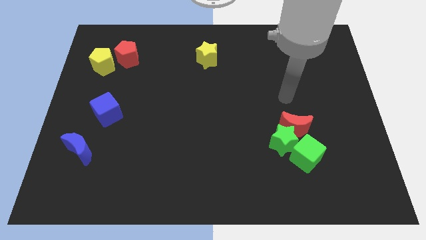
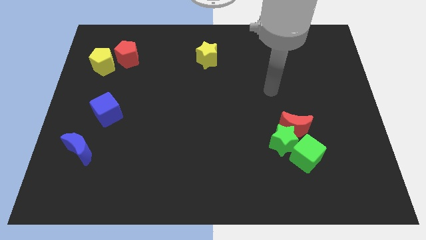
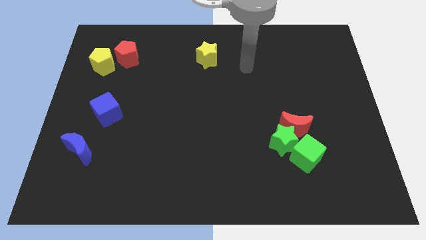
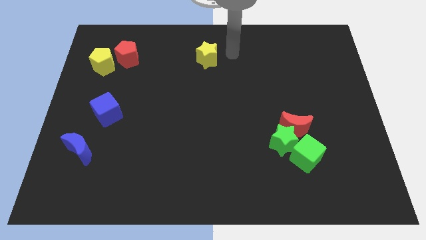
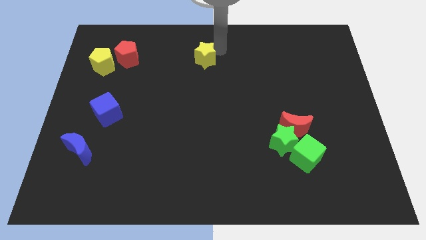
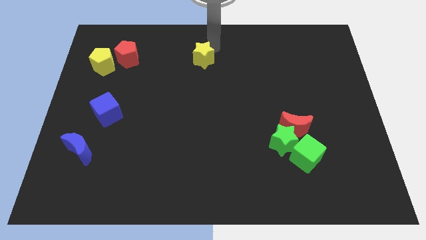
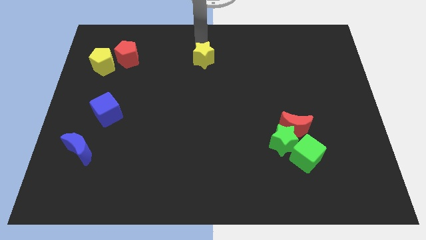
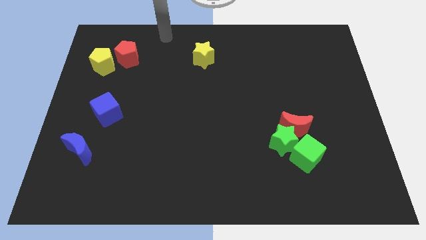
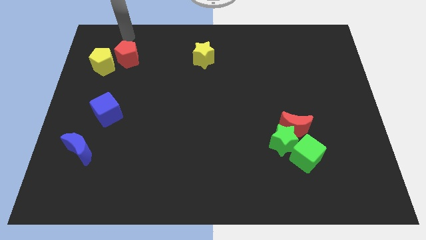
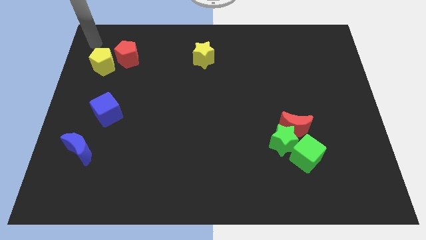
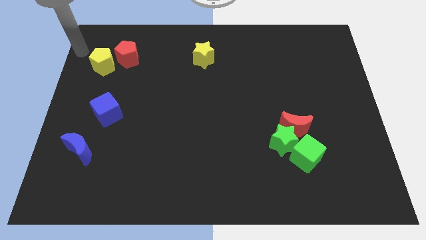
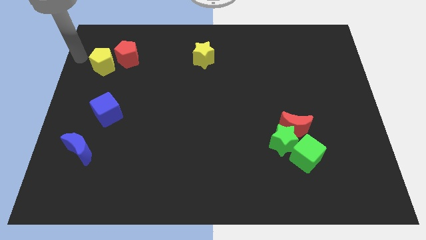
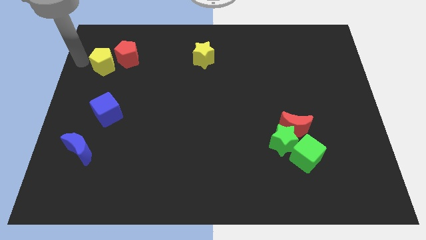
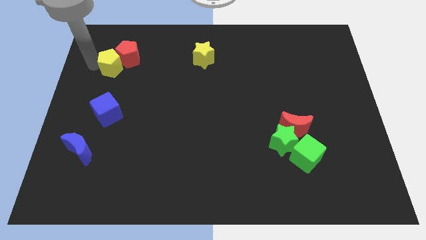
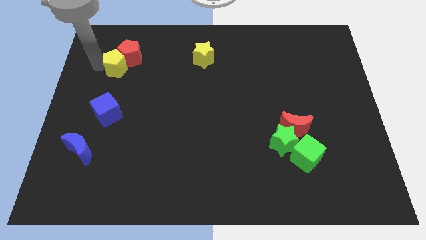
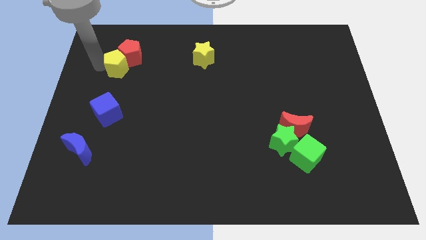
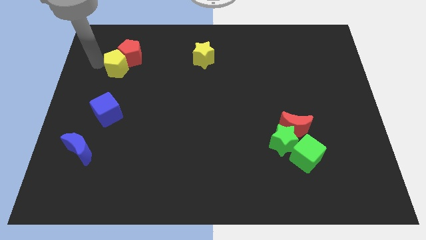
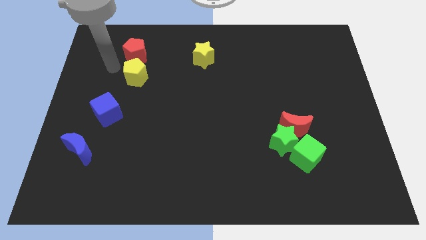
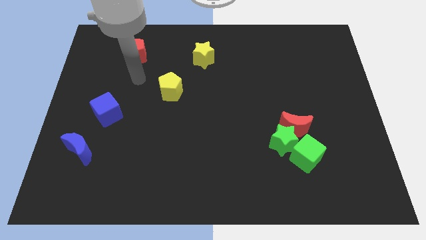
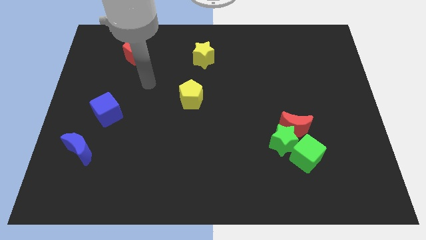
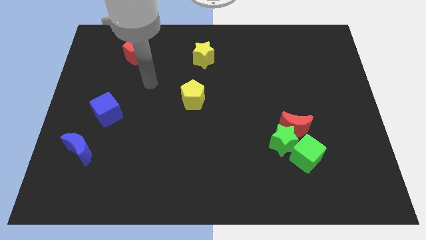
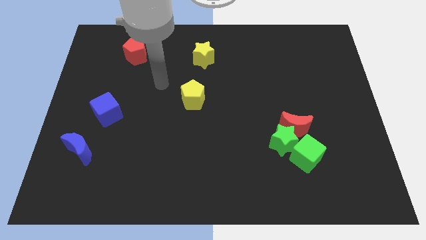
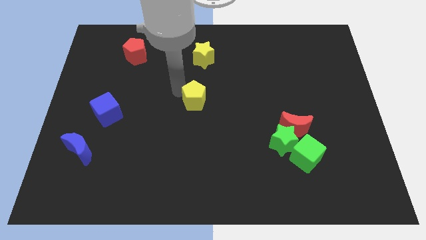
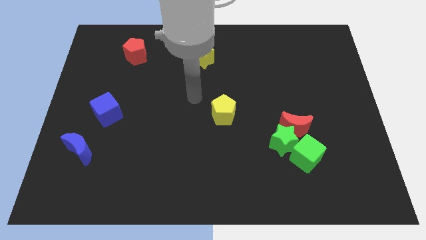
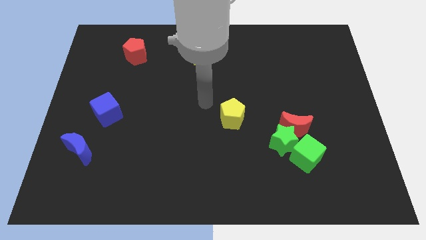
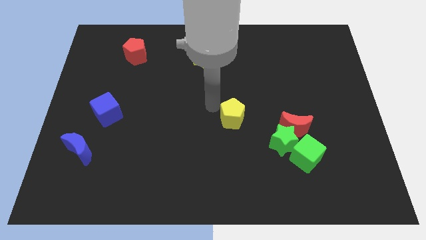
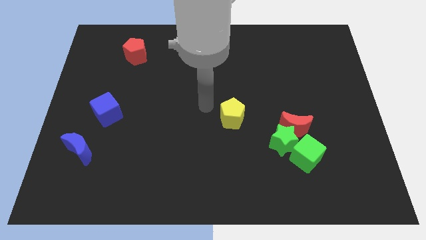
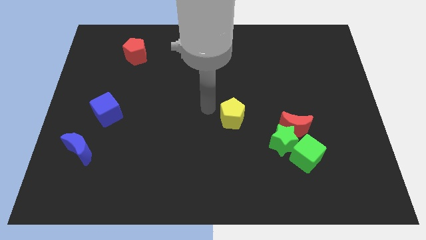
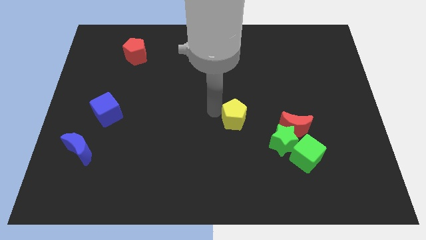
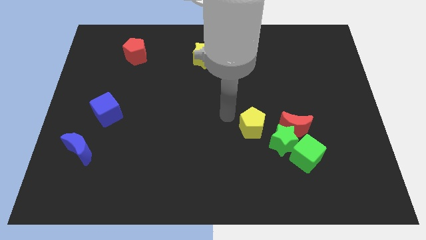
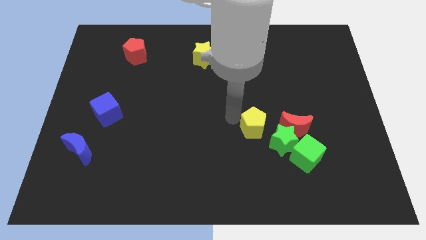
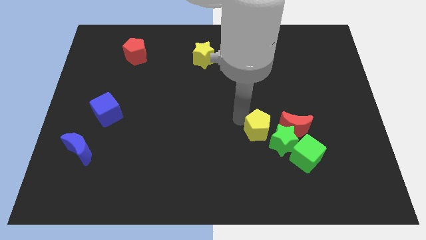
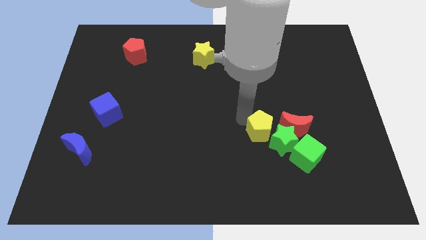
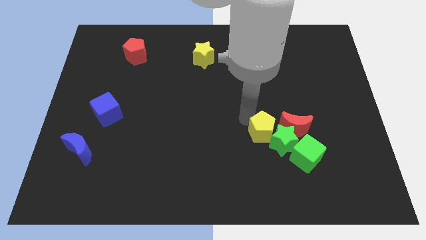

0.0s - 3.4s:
slide the yellow pentagon towards the green star

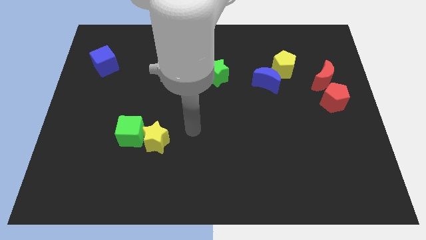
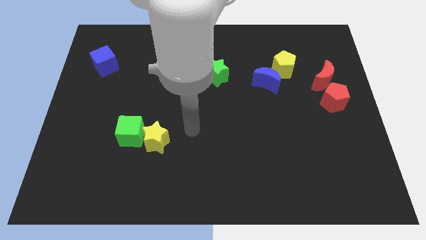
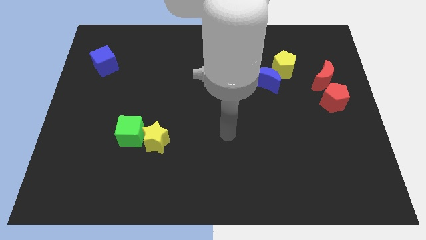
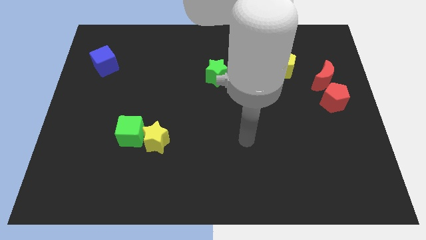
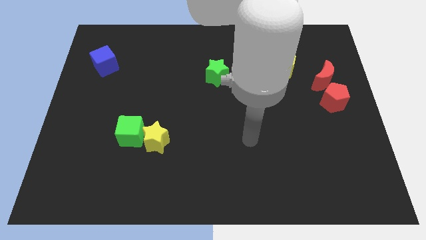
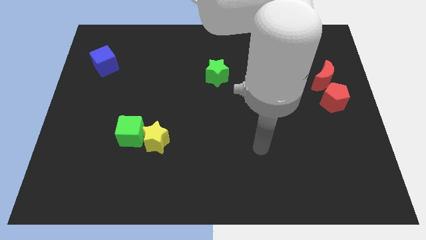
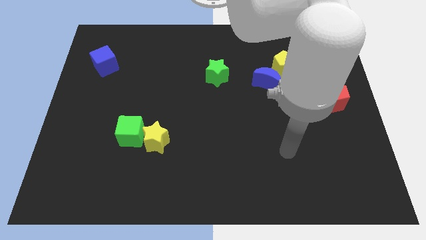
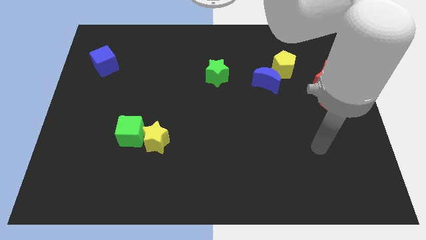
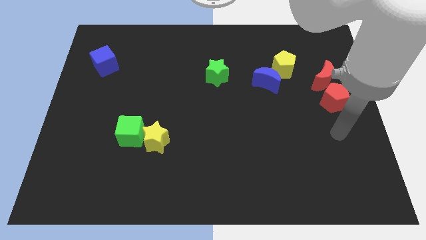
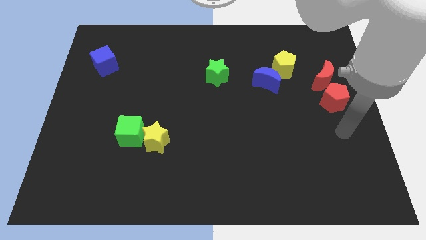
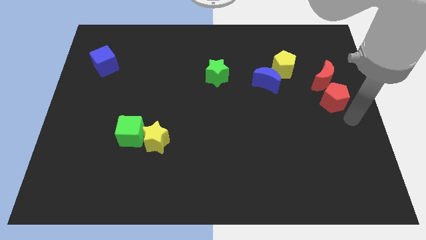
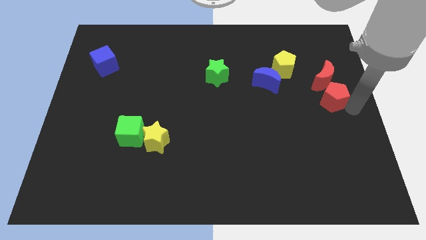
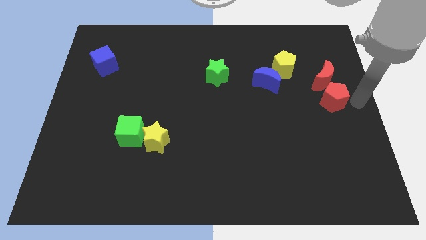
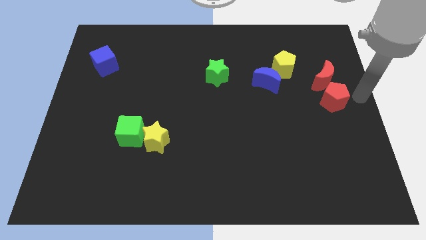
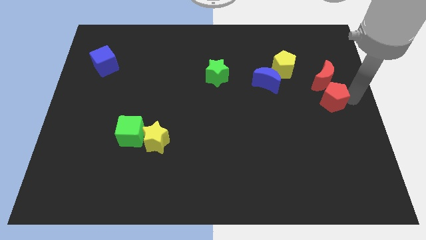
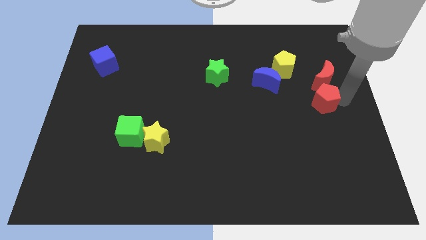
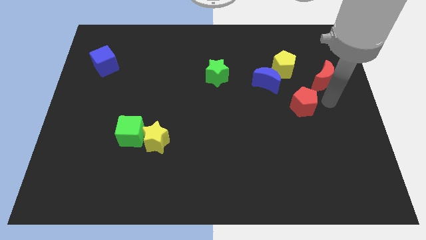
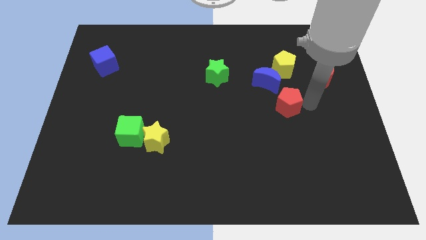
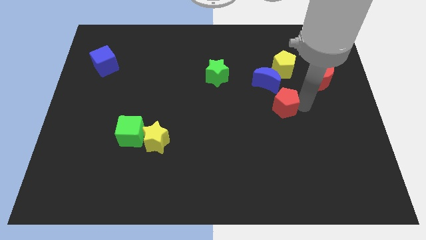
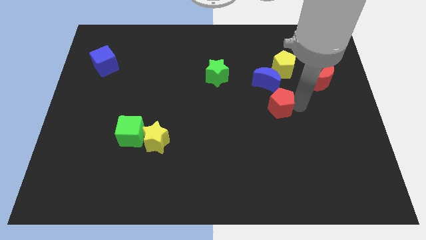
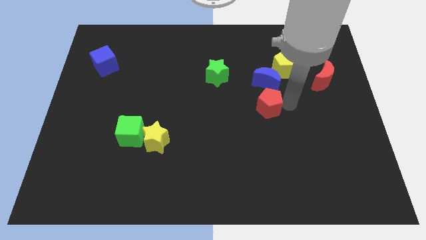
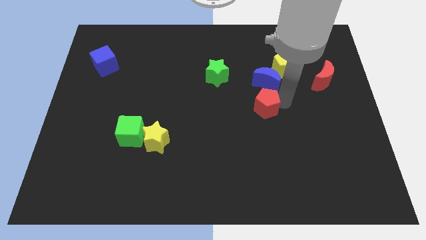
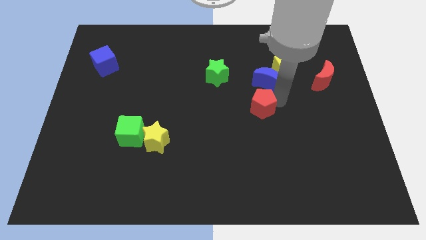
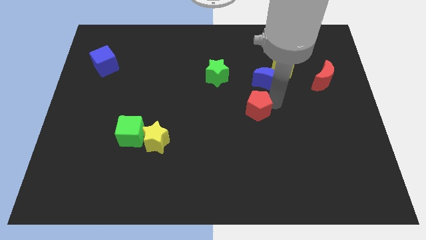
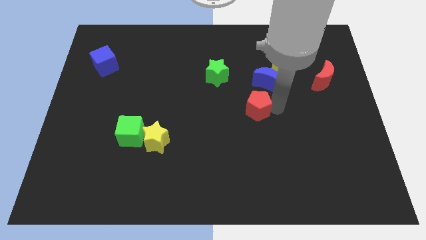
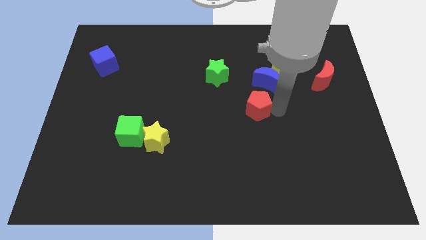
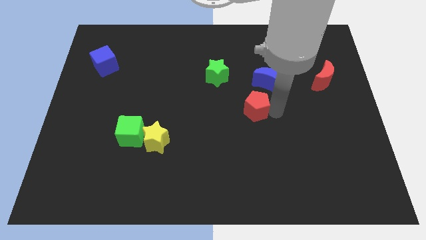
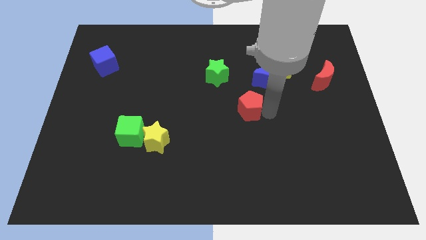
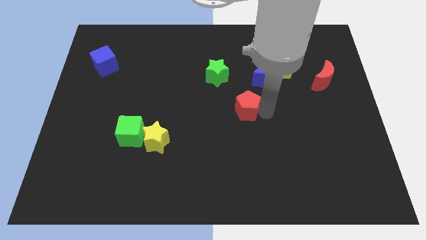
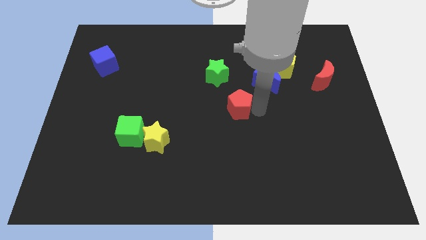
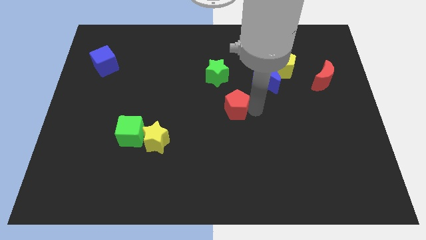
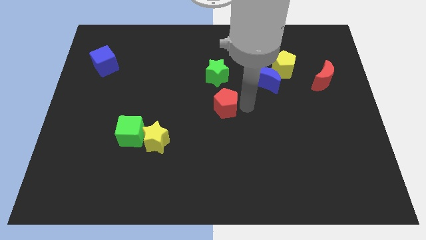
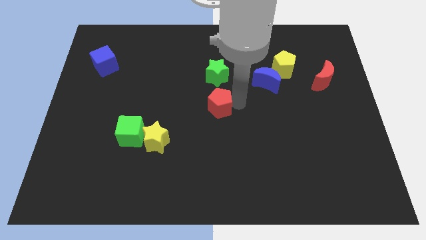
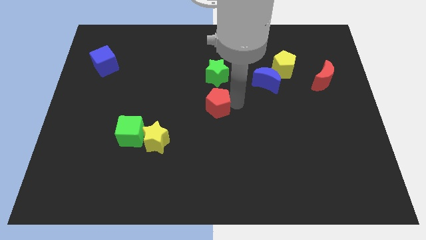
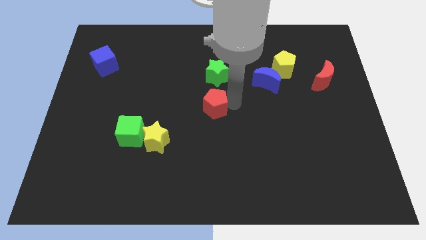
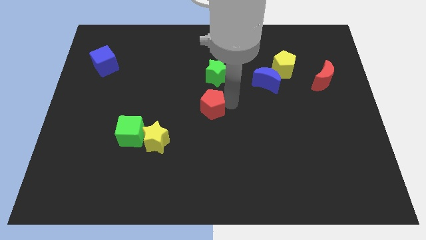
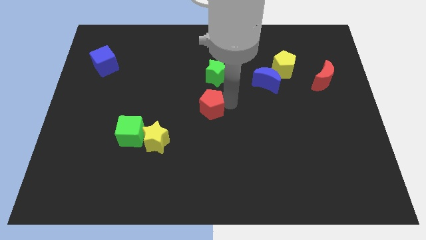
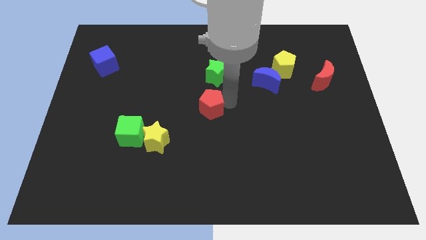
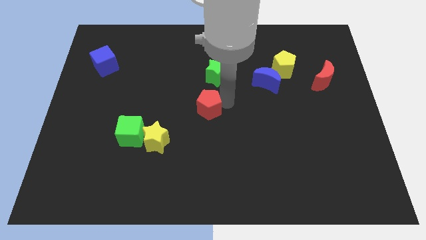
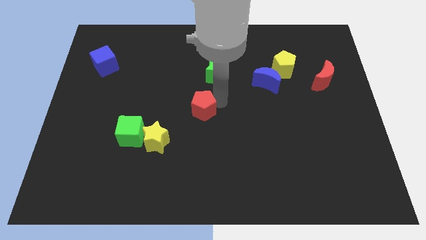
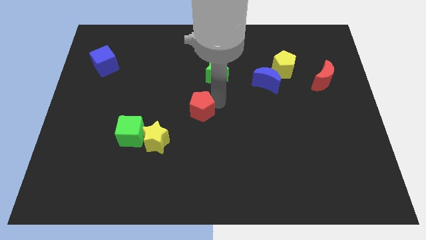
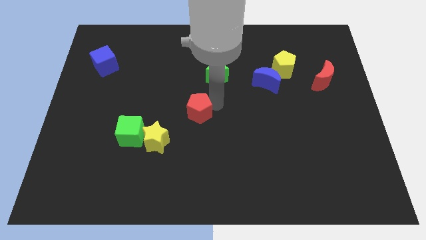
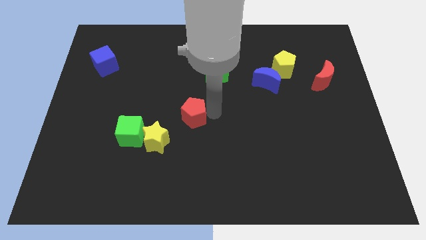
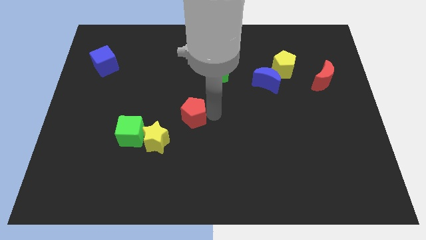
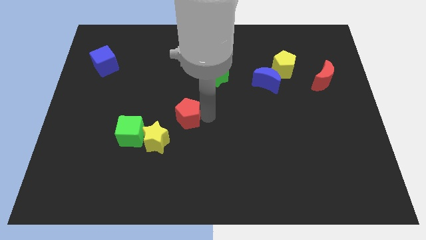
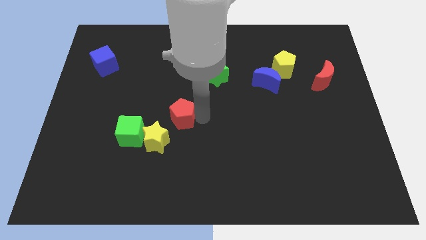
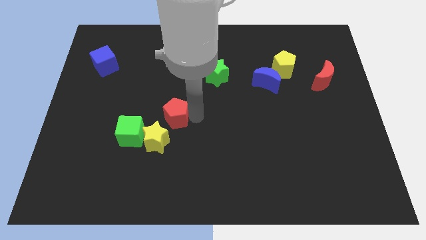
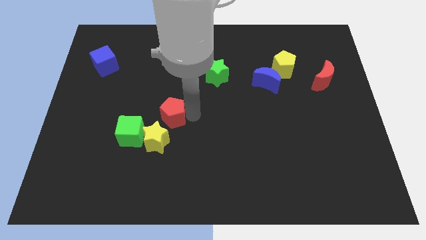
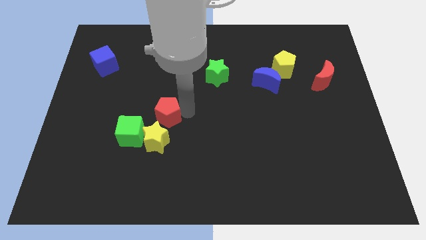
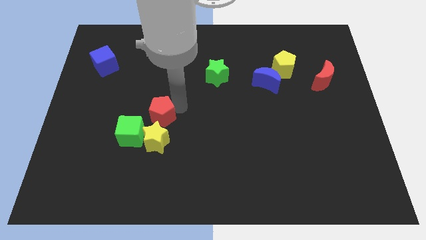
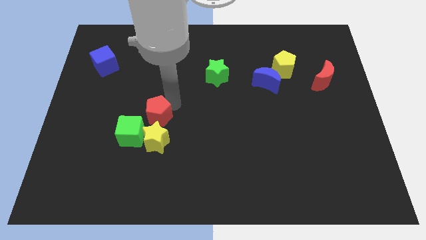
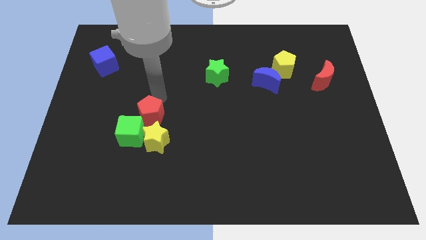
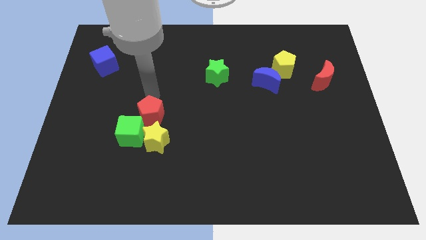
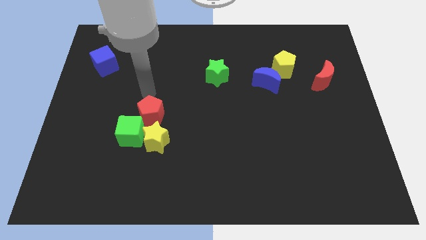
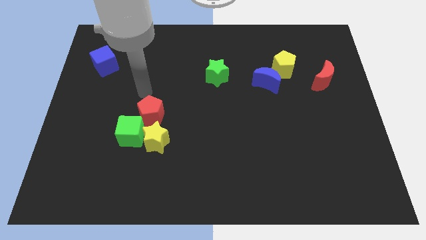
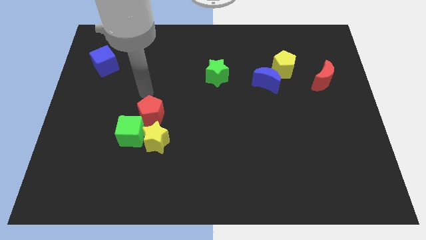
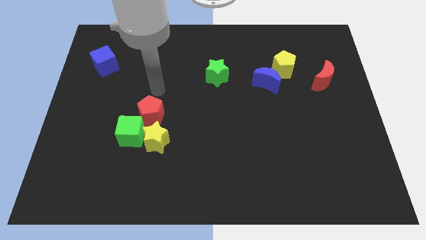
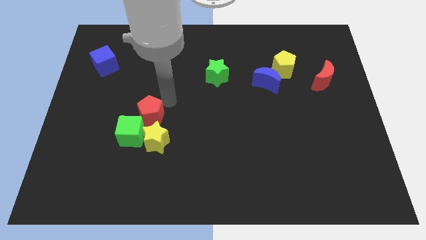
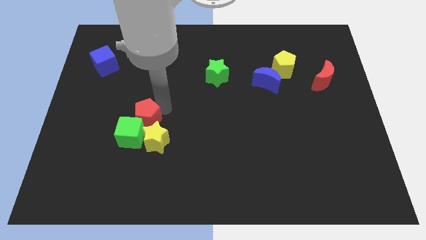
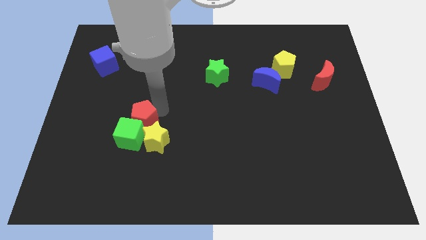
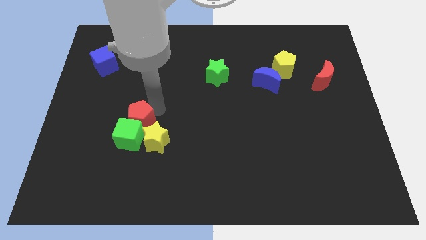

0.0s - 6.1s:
move the red pentagon next to the green cube
